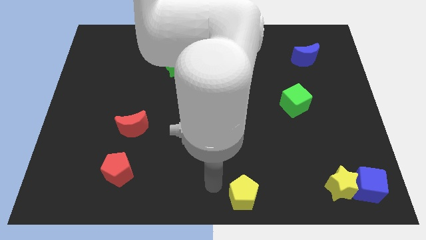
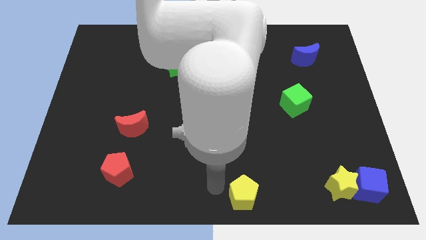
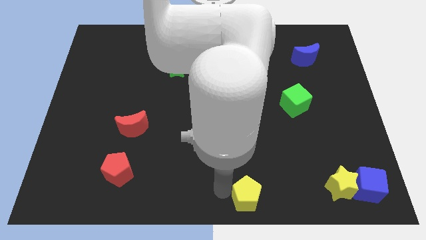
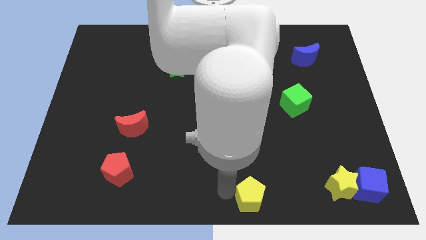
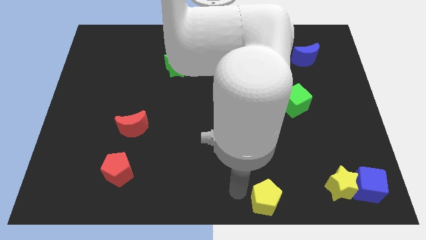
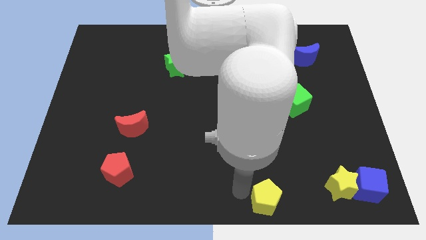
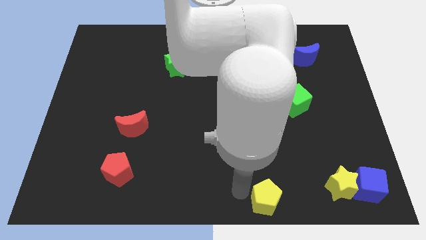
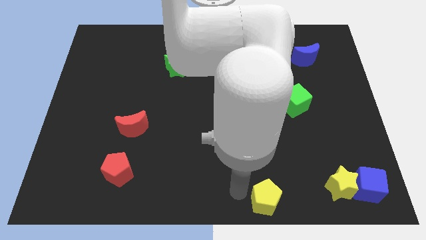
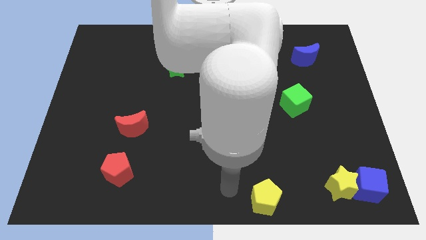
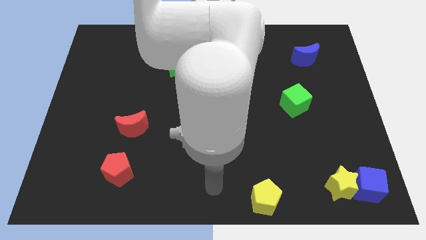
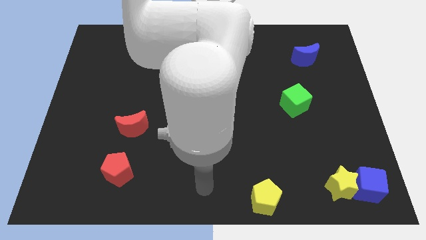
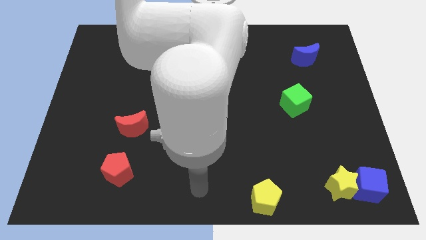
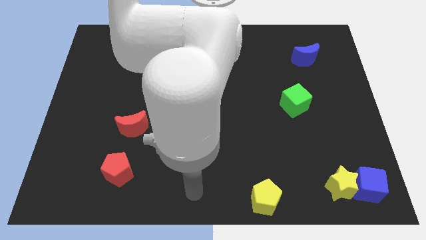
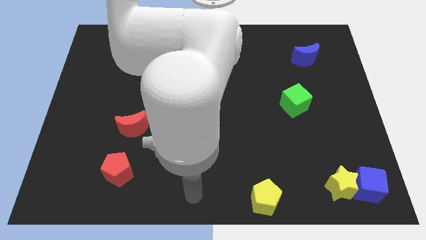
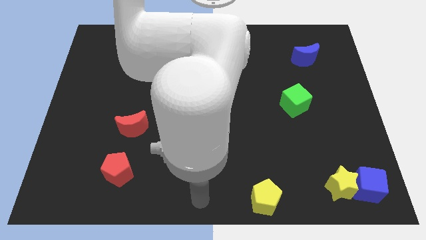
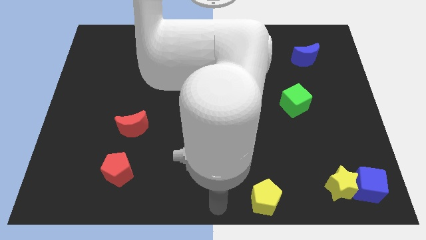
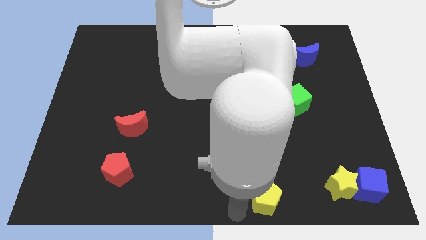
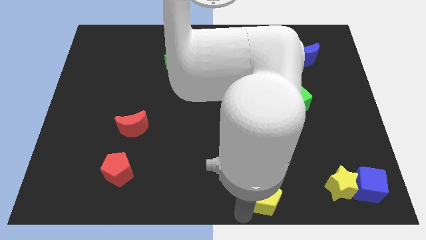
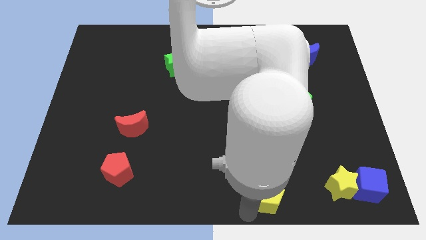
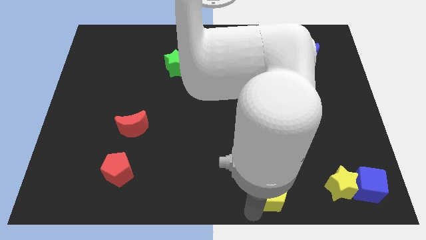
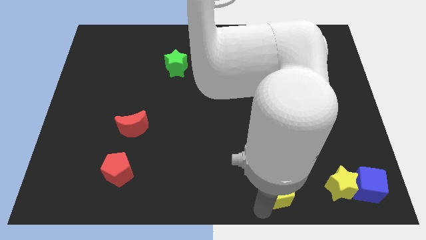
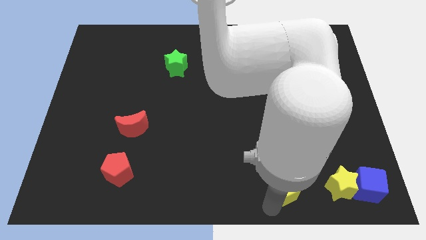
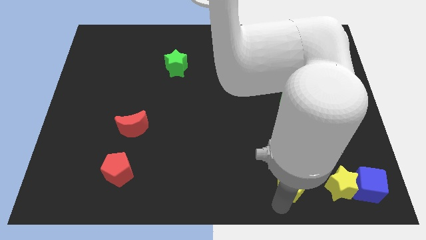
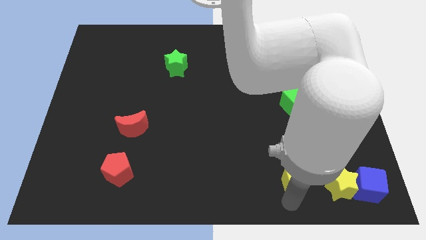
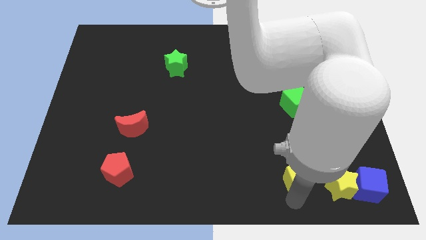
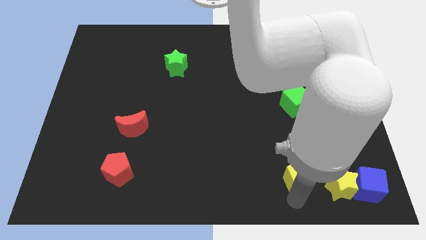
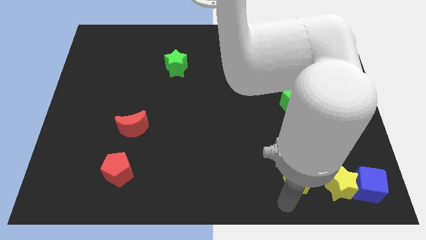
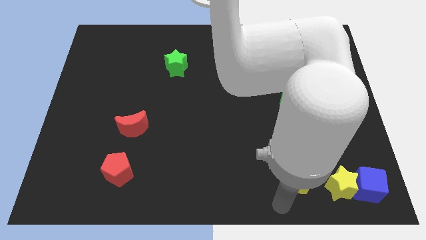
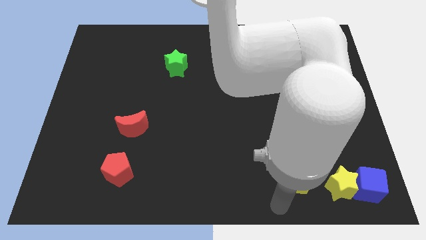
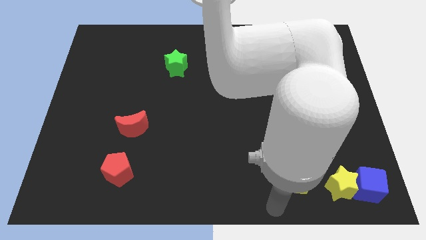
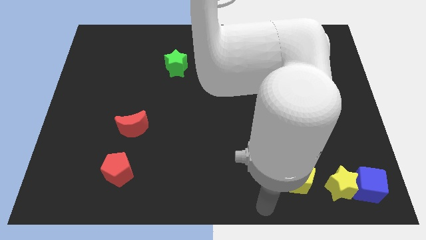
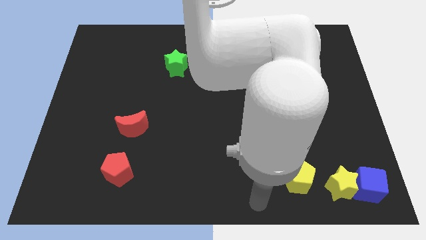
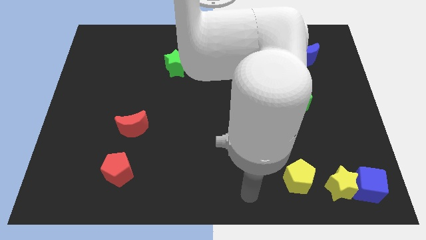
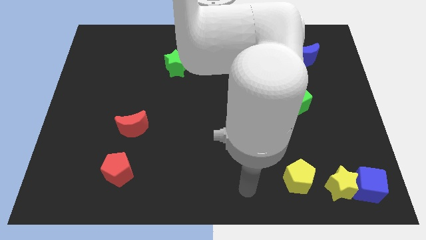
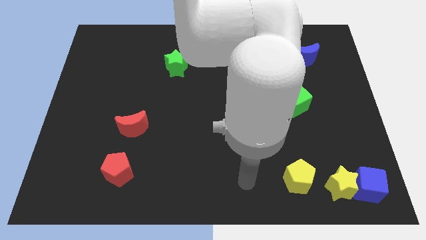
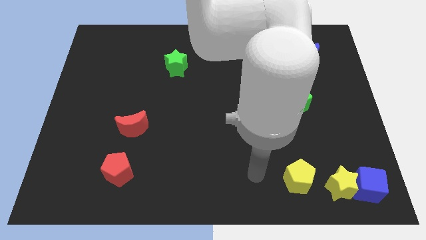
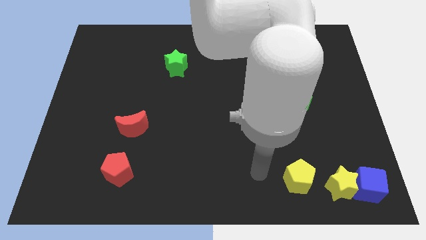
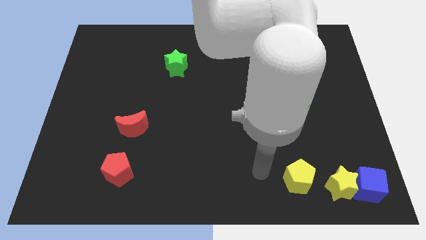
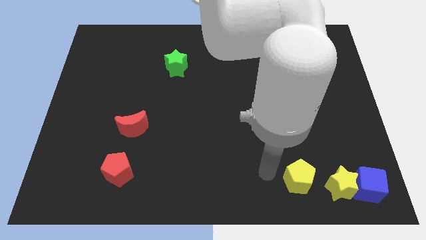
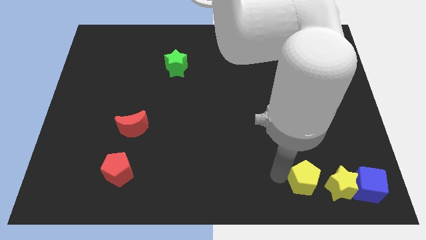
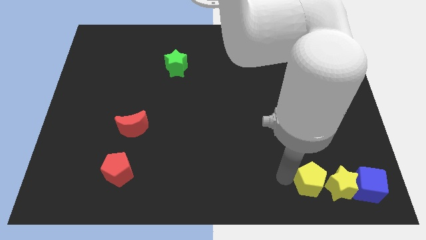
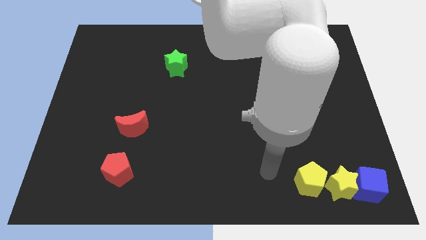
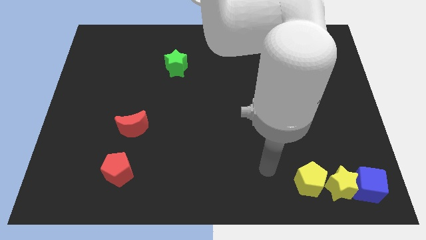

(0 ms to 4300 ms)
push the yellow pentagon to the left of yellow star

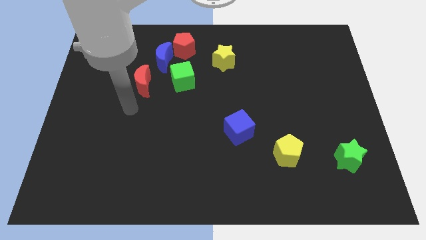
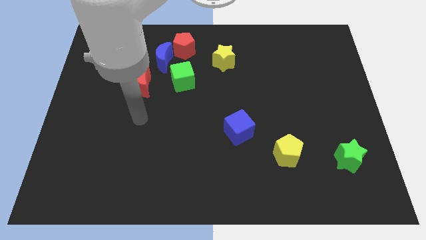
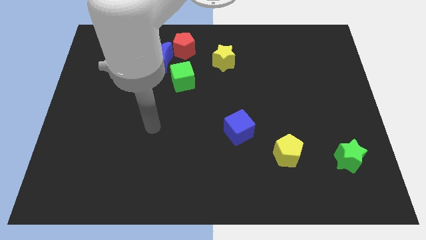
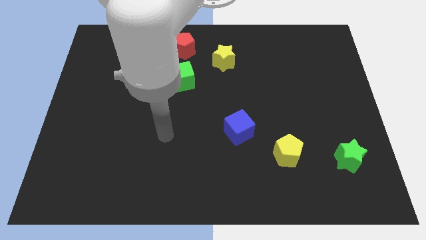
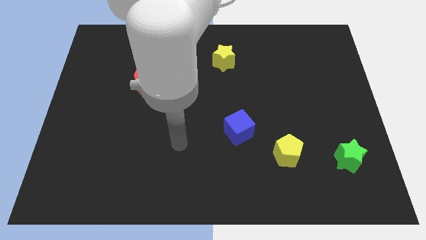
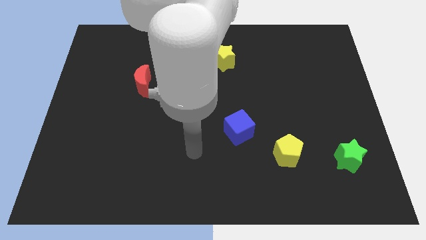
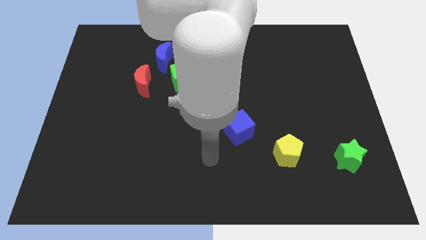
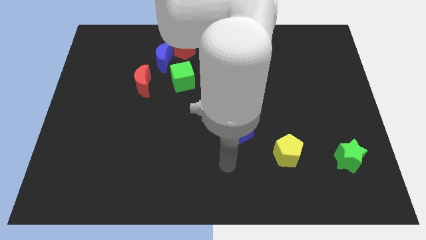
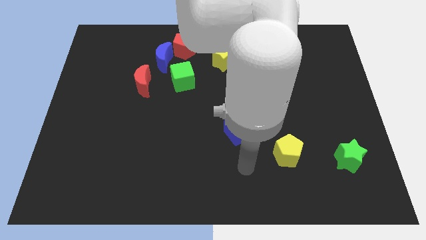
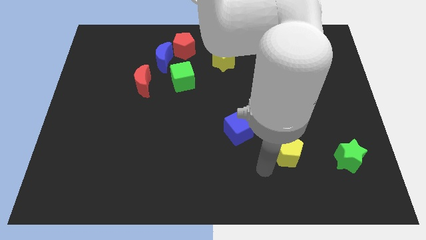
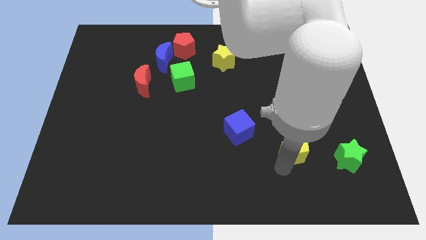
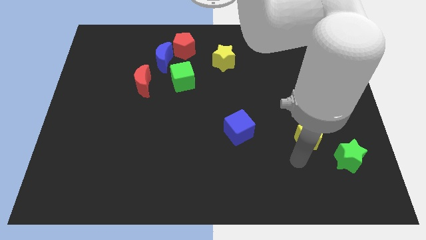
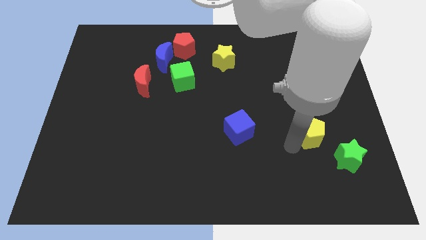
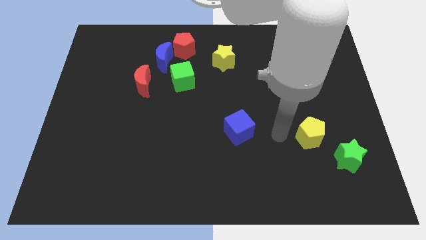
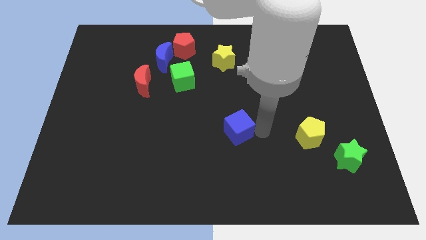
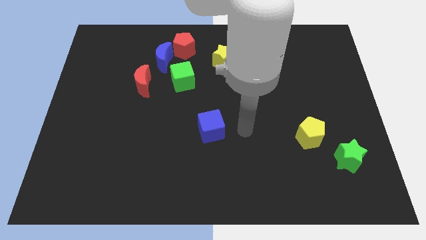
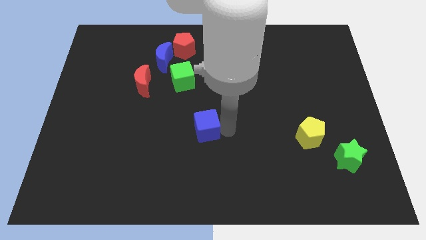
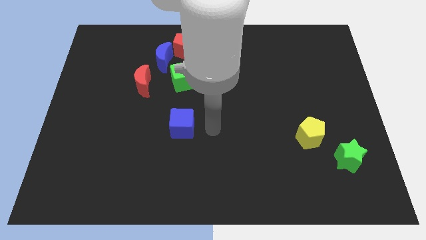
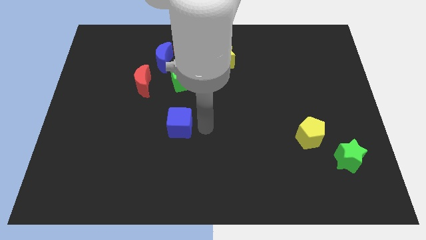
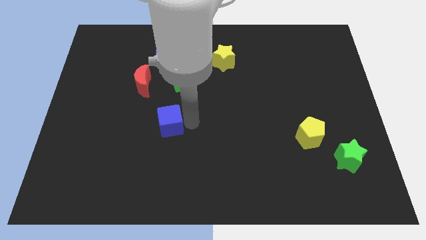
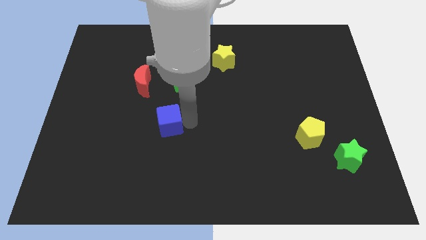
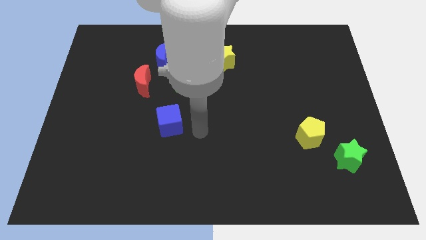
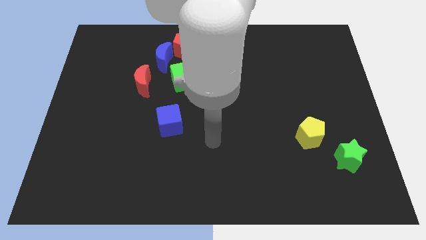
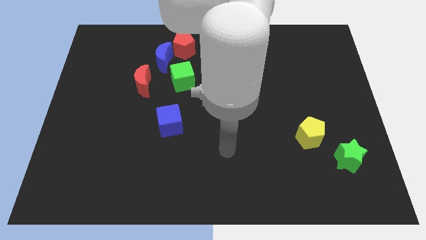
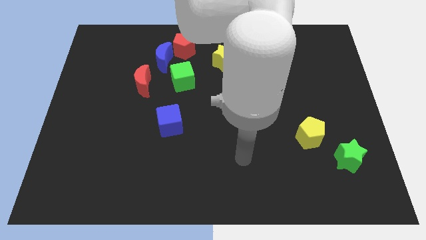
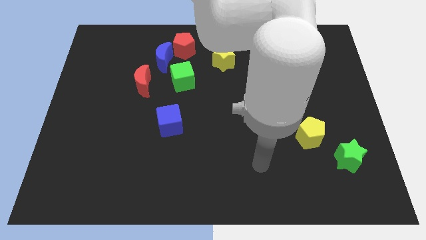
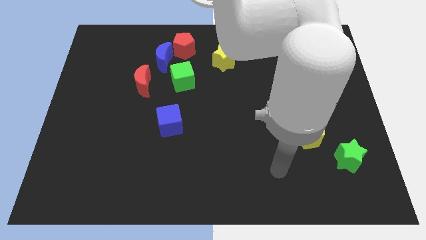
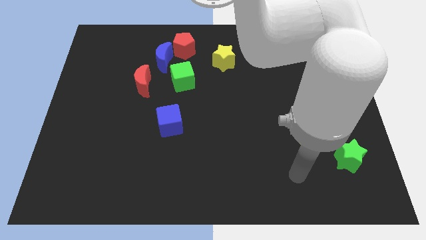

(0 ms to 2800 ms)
push the blue cube bottom left diagonally to the green cube

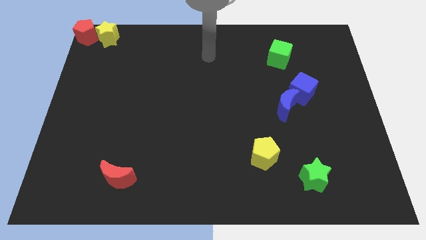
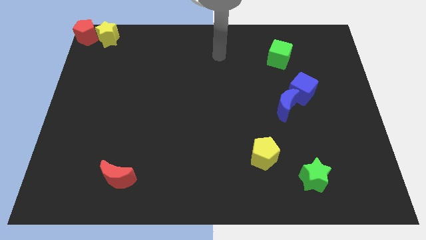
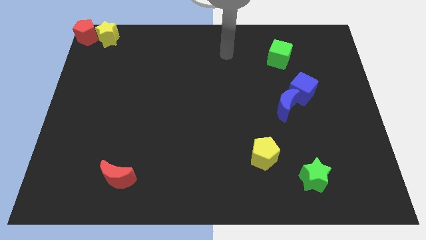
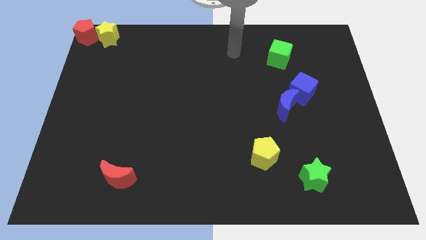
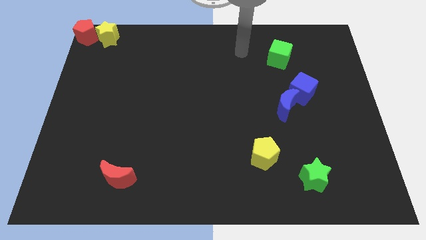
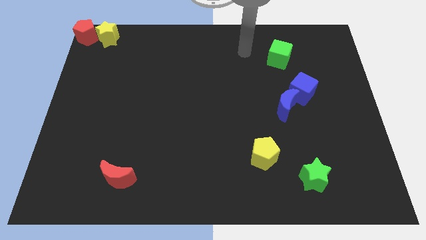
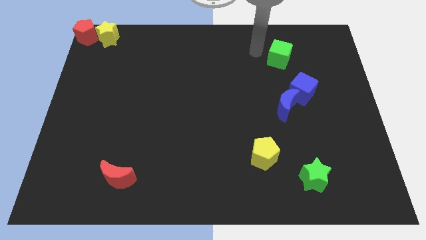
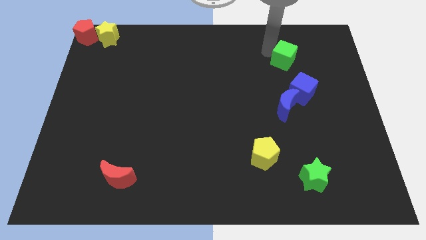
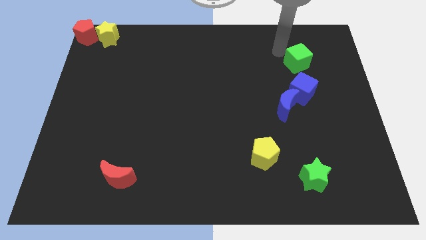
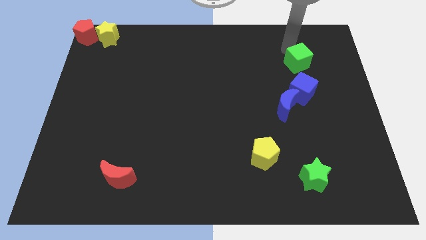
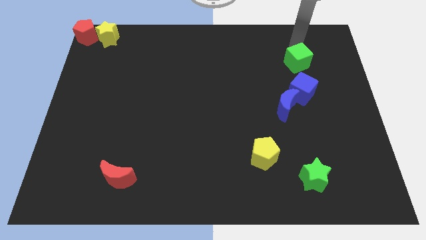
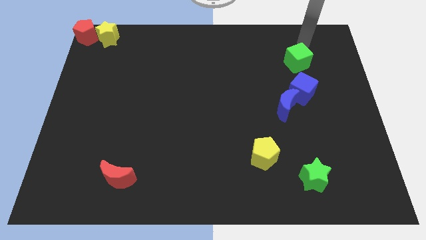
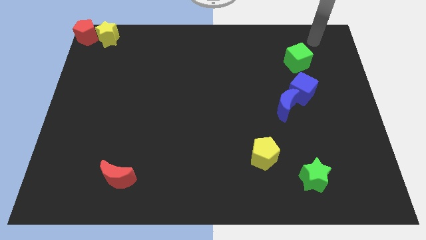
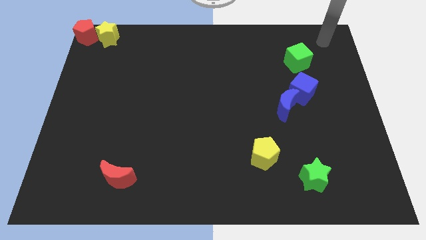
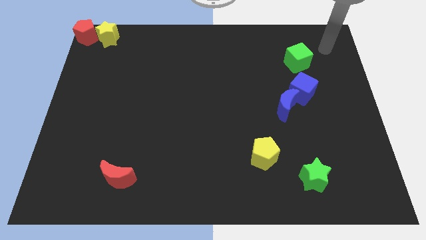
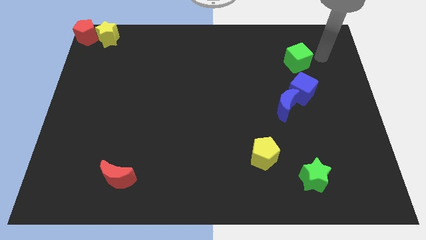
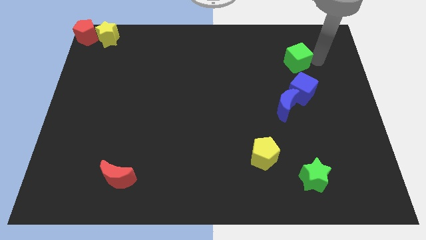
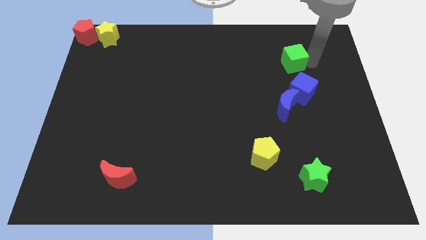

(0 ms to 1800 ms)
tap on the top side of the green cube

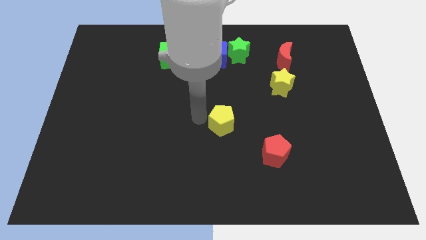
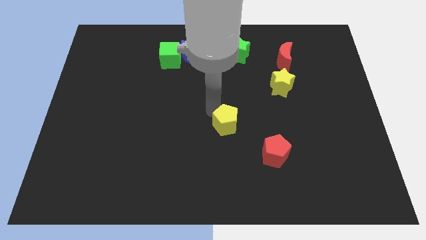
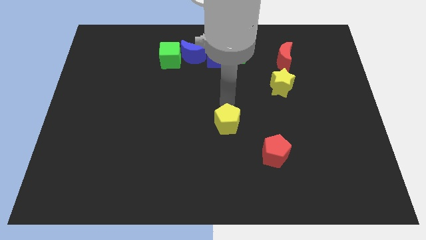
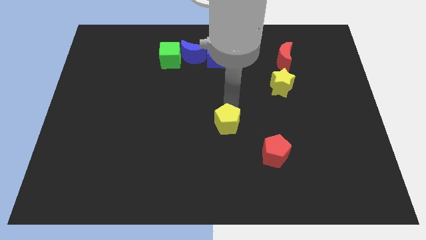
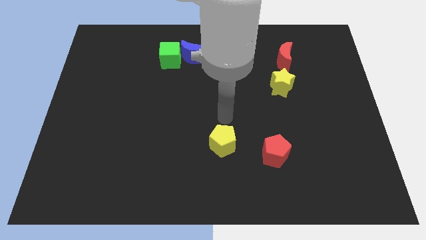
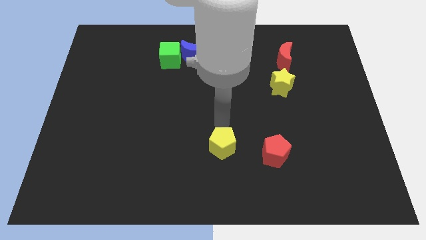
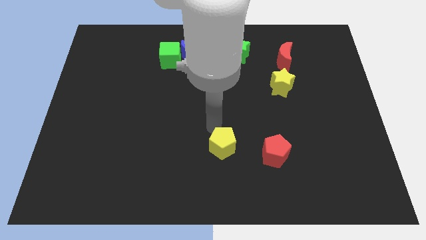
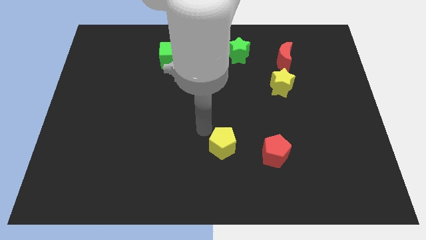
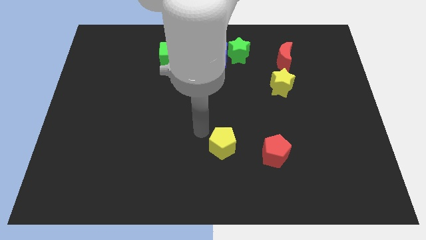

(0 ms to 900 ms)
push the yellow pentagon to the left of the red pentagon
